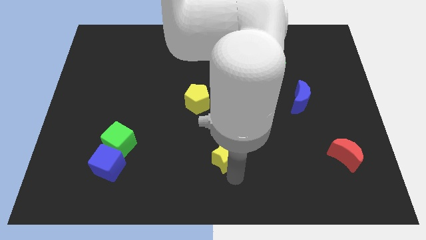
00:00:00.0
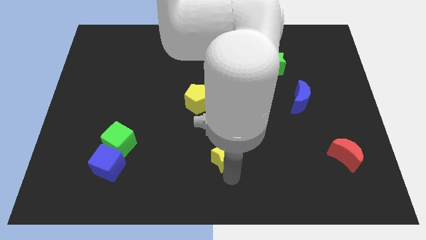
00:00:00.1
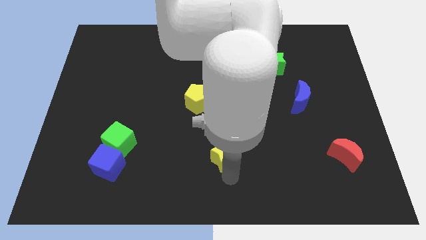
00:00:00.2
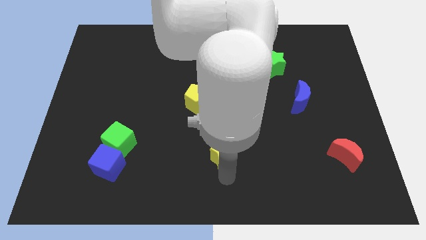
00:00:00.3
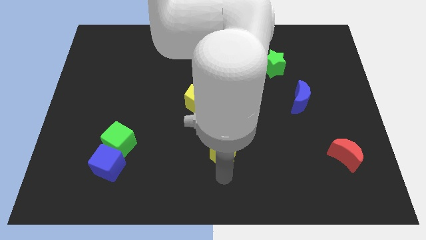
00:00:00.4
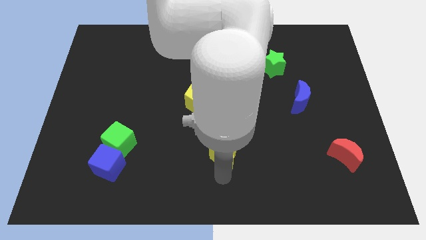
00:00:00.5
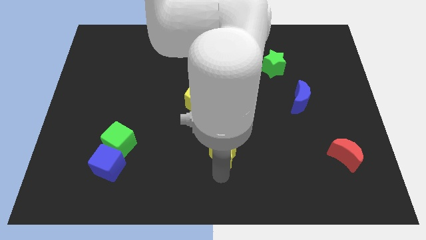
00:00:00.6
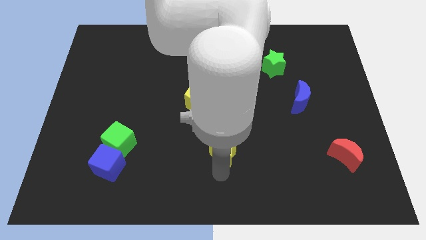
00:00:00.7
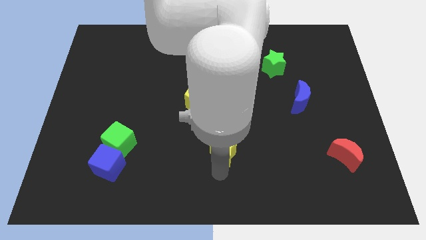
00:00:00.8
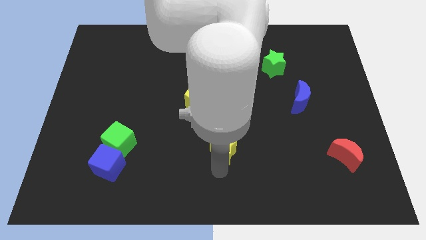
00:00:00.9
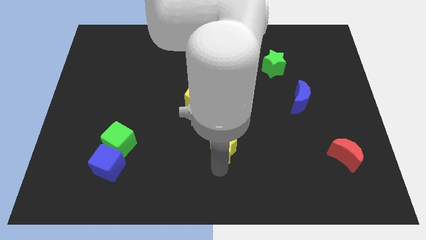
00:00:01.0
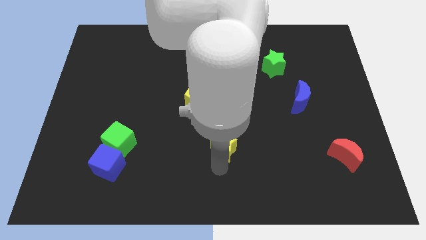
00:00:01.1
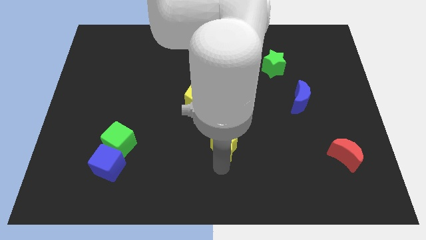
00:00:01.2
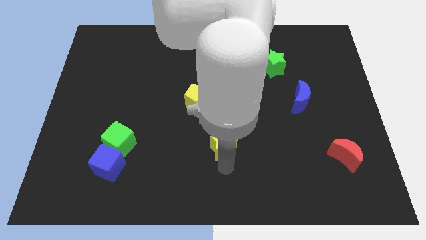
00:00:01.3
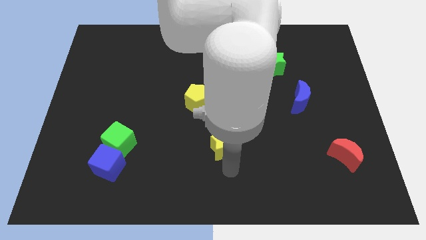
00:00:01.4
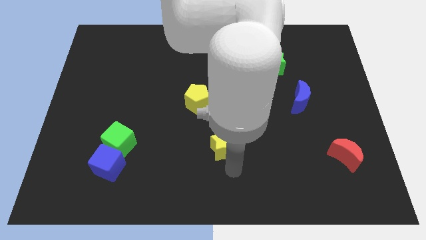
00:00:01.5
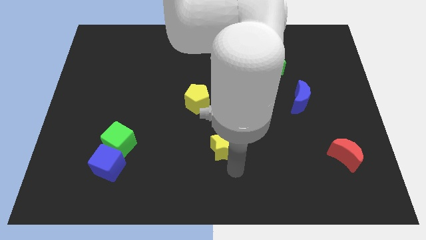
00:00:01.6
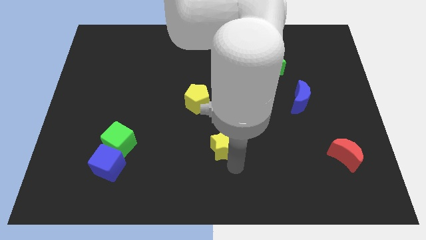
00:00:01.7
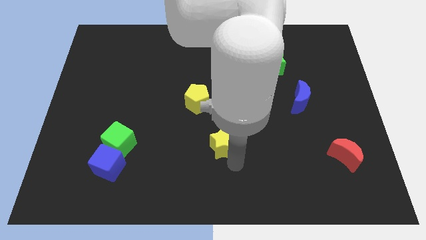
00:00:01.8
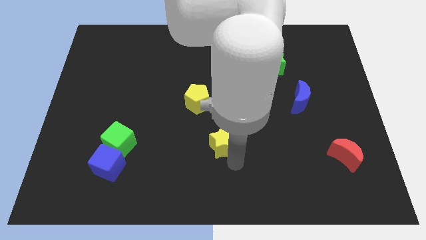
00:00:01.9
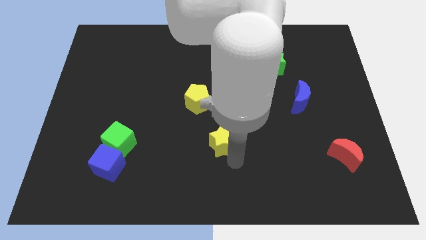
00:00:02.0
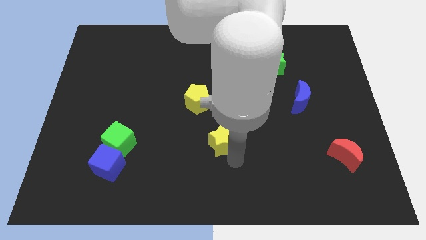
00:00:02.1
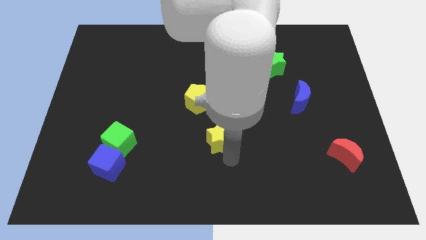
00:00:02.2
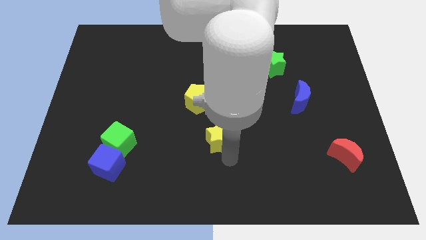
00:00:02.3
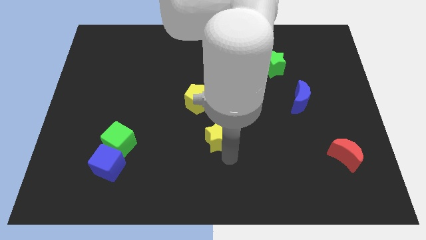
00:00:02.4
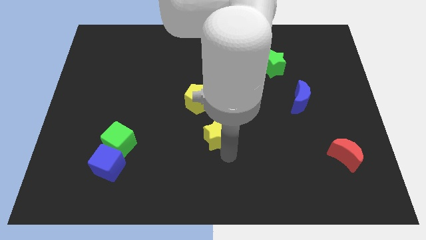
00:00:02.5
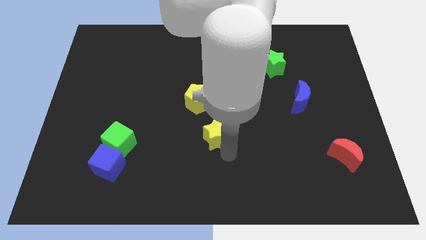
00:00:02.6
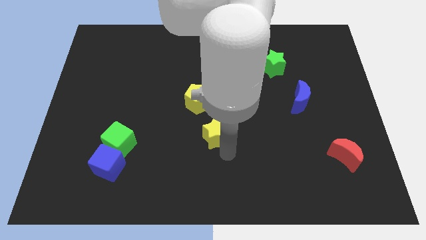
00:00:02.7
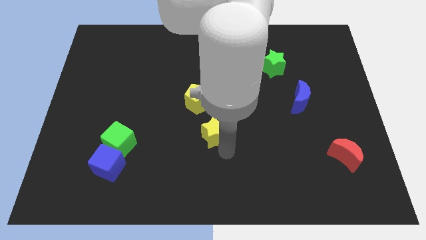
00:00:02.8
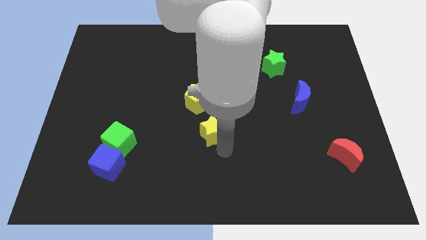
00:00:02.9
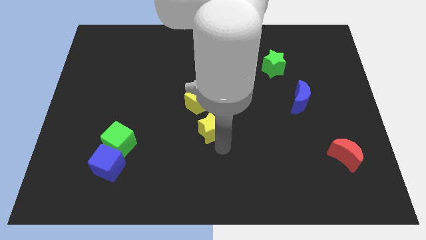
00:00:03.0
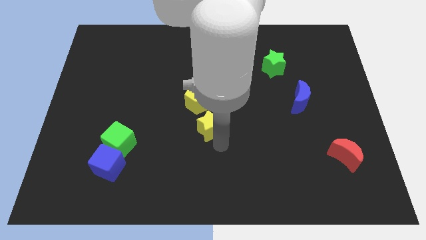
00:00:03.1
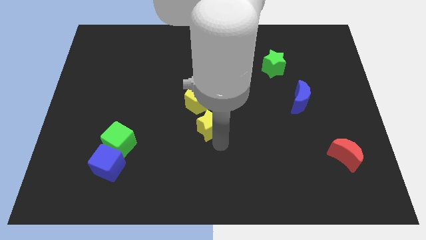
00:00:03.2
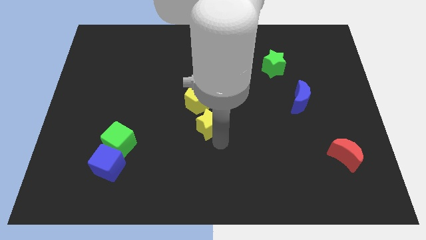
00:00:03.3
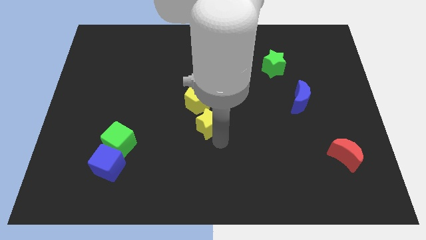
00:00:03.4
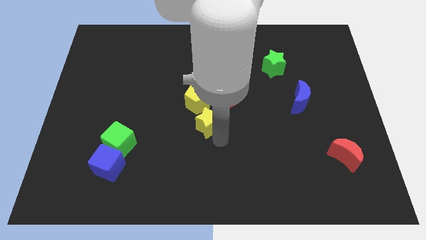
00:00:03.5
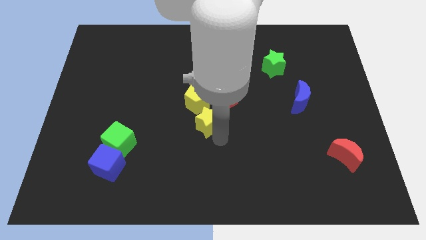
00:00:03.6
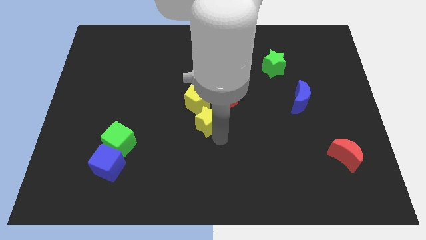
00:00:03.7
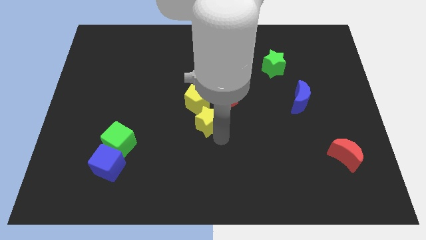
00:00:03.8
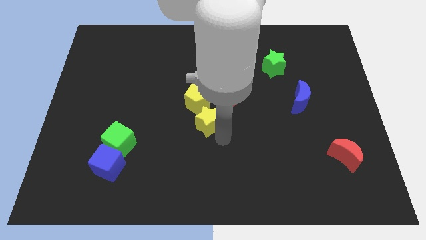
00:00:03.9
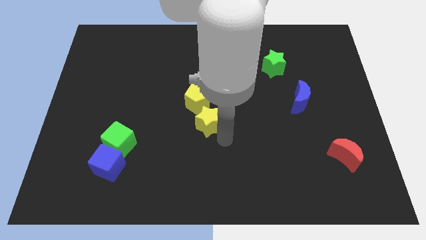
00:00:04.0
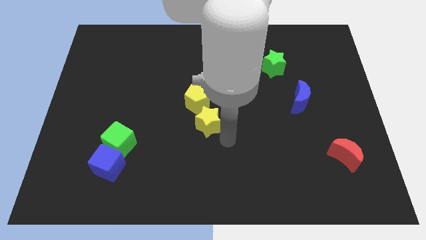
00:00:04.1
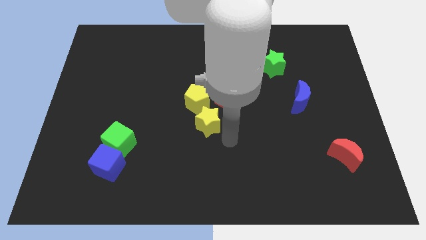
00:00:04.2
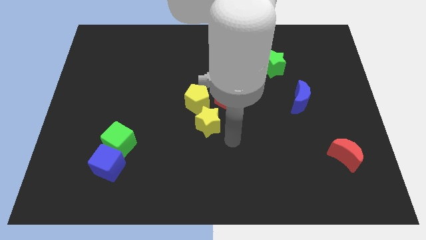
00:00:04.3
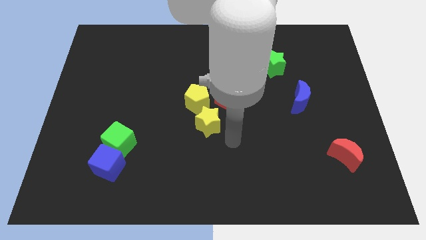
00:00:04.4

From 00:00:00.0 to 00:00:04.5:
push the yellow star to the bottom of the yellow pentagon

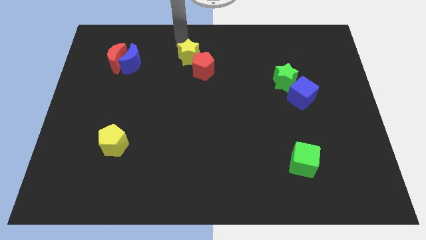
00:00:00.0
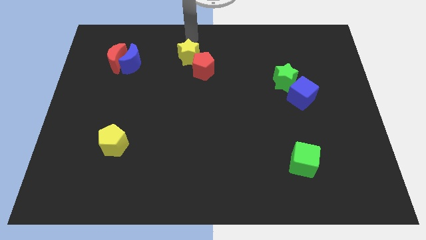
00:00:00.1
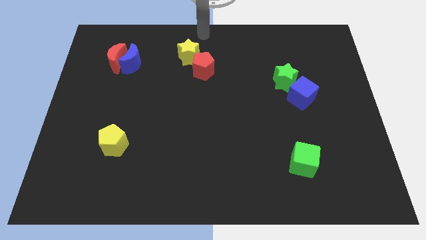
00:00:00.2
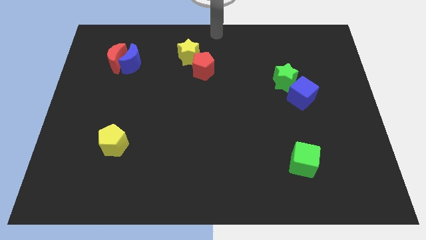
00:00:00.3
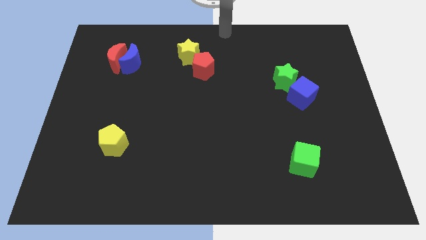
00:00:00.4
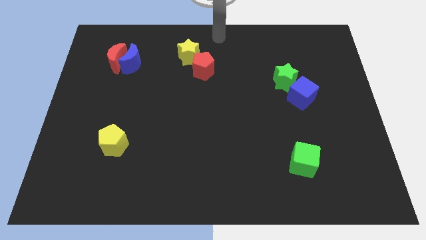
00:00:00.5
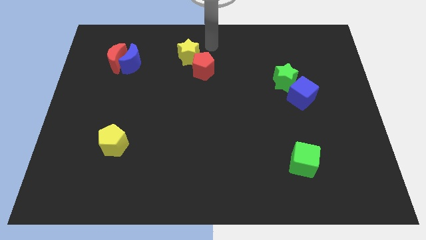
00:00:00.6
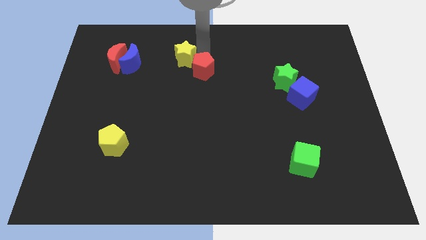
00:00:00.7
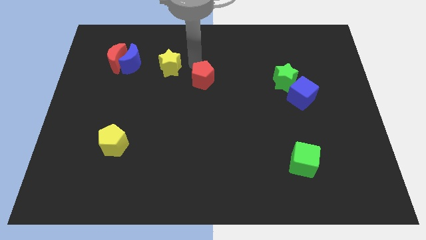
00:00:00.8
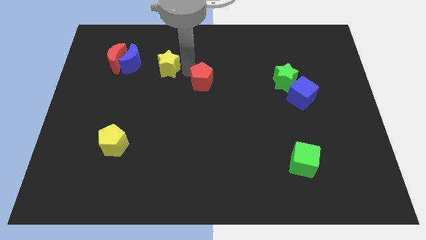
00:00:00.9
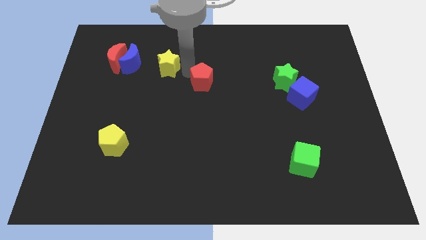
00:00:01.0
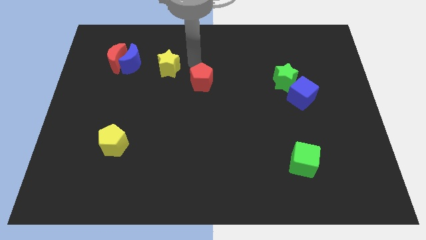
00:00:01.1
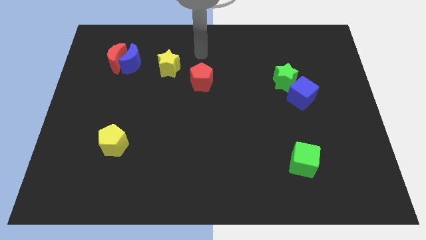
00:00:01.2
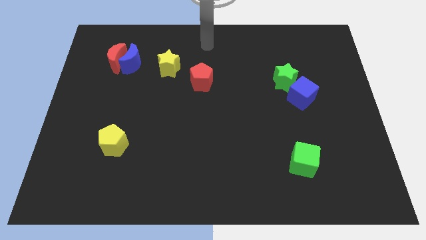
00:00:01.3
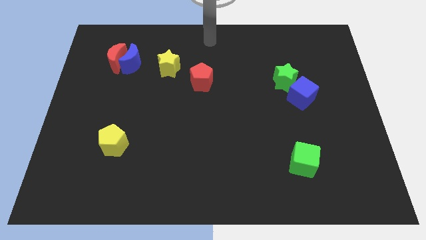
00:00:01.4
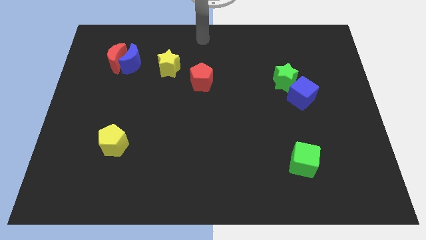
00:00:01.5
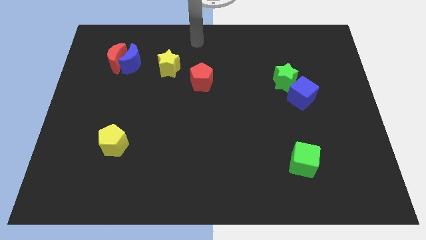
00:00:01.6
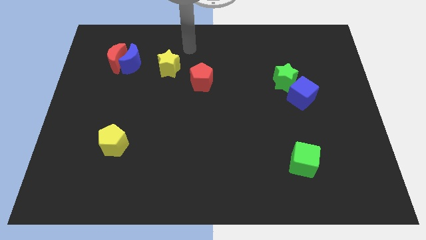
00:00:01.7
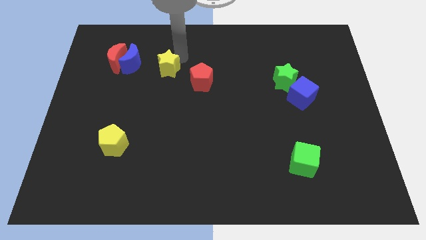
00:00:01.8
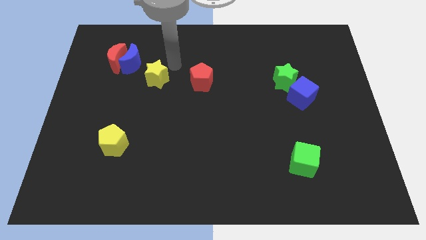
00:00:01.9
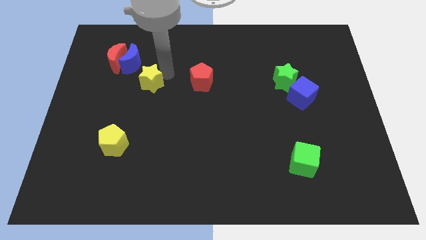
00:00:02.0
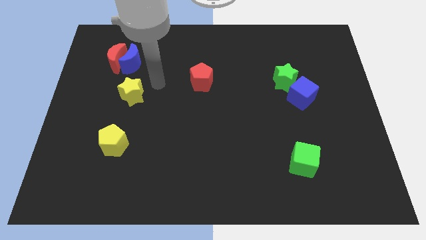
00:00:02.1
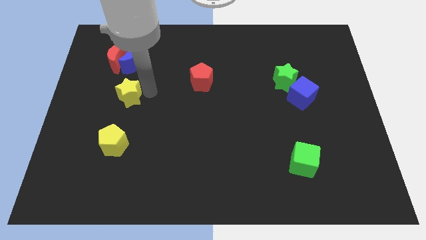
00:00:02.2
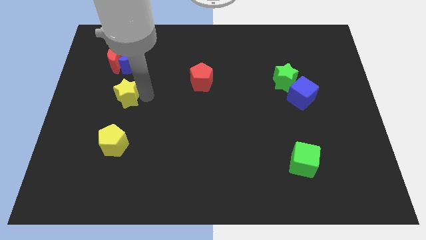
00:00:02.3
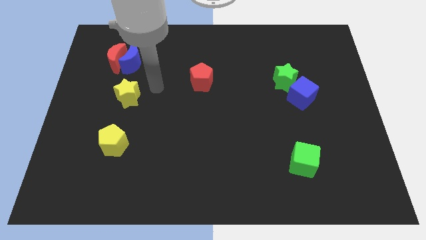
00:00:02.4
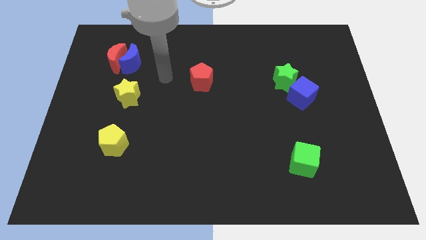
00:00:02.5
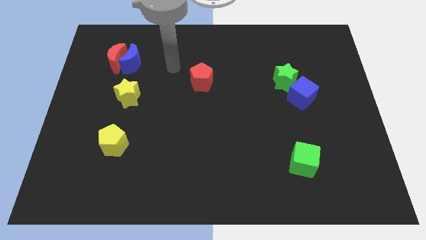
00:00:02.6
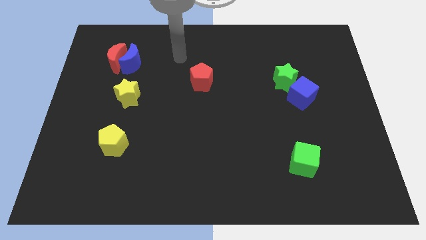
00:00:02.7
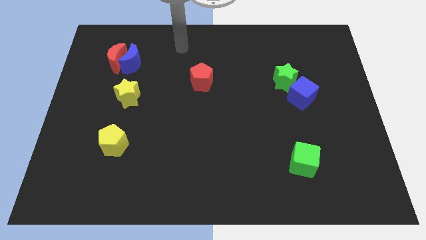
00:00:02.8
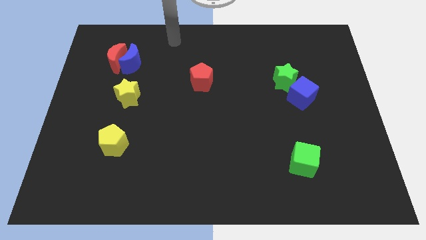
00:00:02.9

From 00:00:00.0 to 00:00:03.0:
move the yellow star to the top of the yellow pentagon

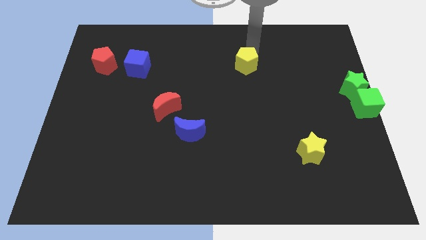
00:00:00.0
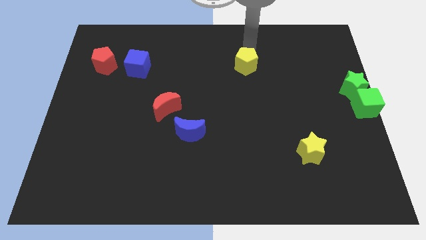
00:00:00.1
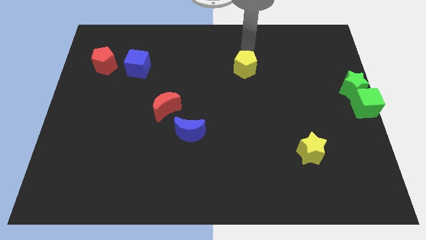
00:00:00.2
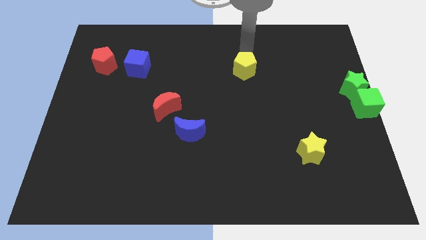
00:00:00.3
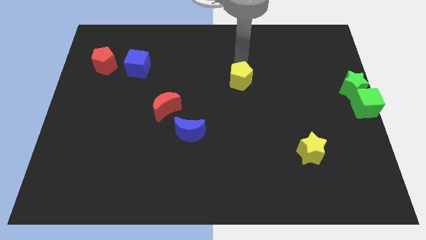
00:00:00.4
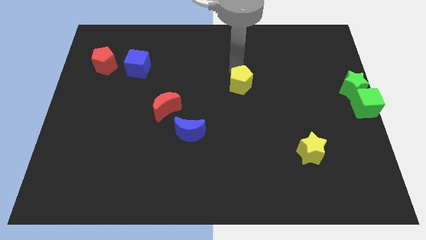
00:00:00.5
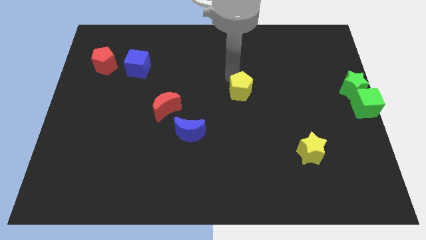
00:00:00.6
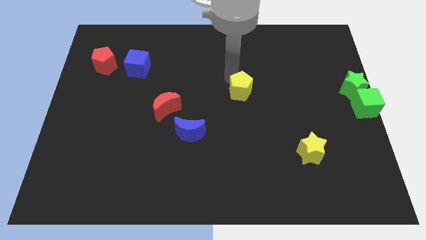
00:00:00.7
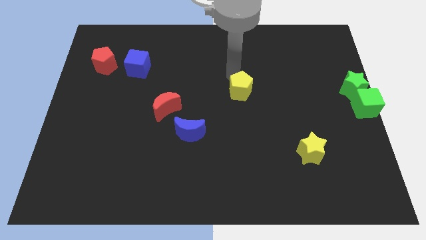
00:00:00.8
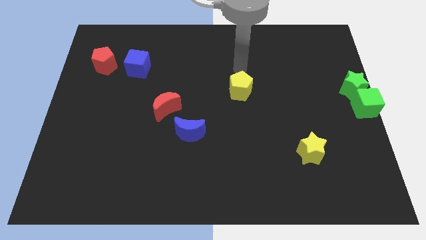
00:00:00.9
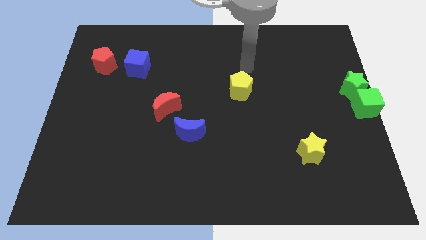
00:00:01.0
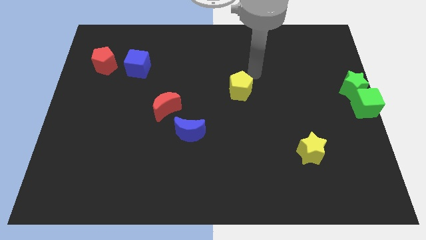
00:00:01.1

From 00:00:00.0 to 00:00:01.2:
push the yellow pentagon to the bottom of the board

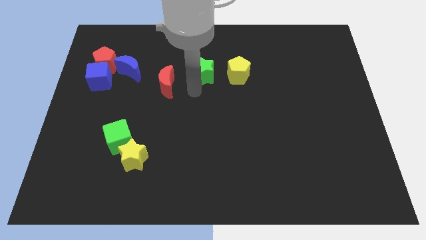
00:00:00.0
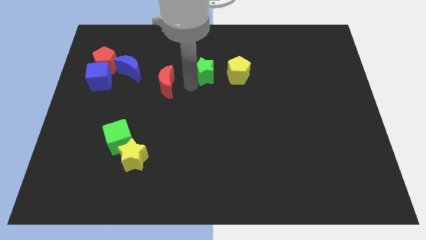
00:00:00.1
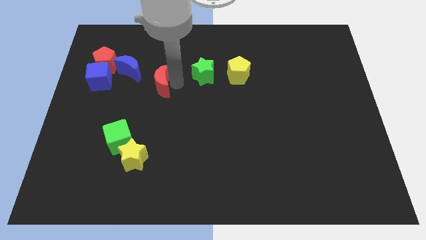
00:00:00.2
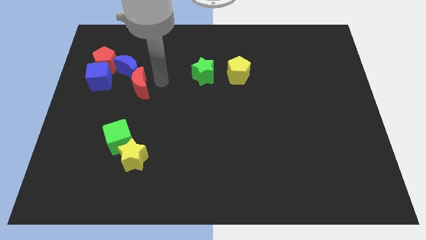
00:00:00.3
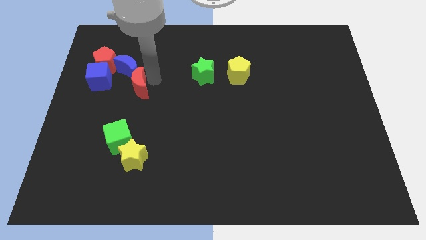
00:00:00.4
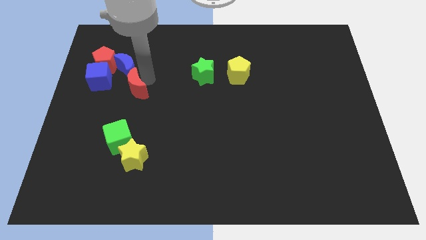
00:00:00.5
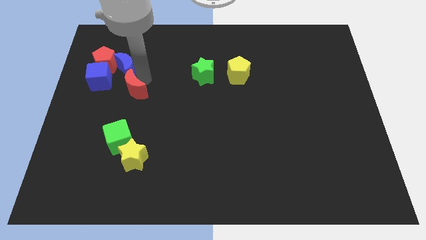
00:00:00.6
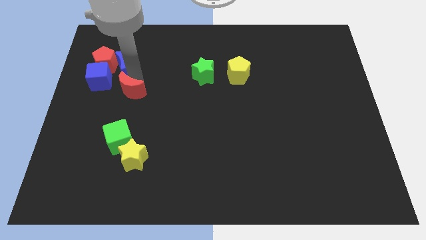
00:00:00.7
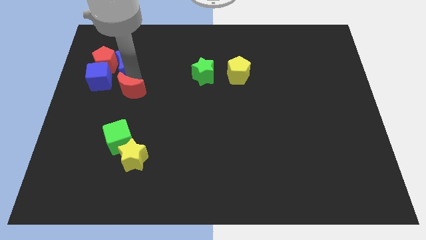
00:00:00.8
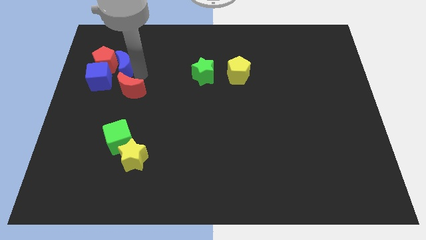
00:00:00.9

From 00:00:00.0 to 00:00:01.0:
place red crescent below blue crescent
